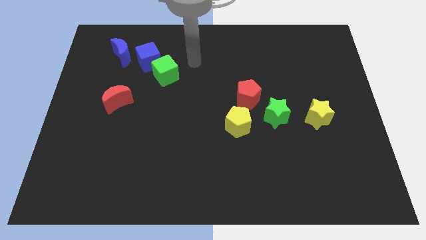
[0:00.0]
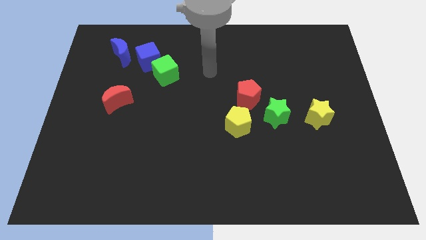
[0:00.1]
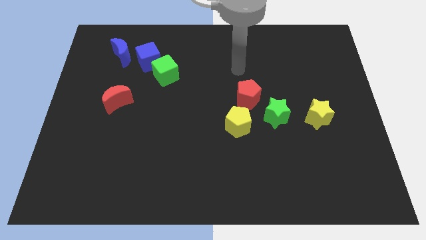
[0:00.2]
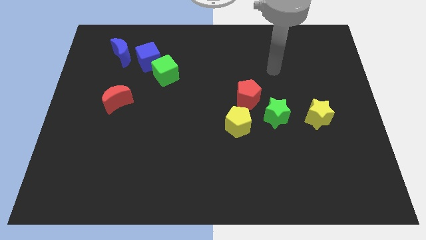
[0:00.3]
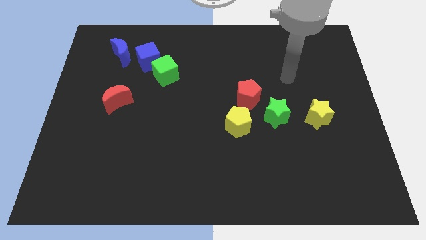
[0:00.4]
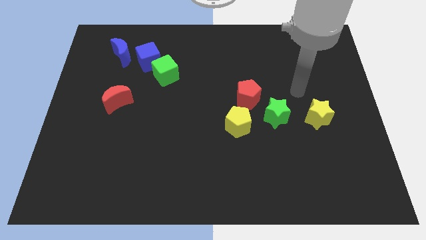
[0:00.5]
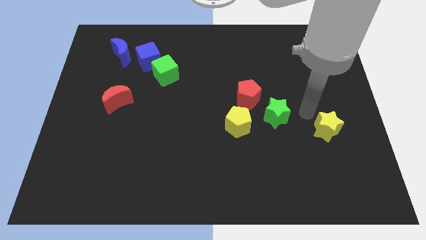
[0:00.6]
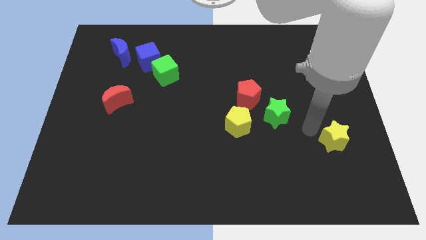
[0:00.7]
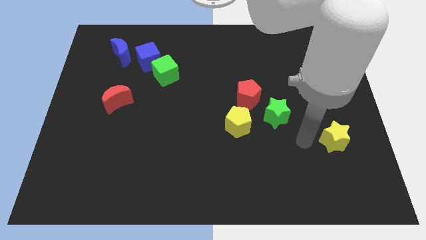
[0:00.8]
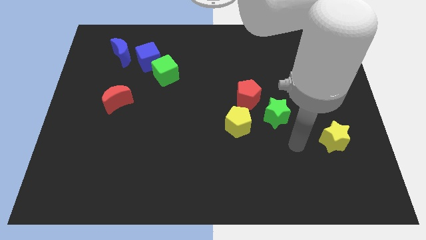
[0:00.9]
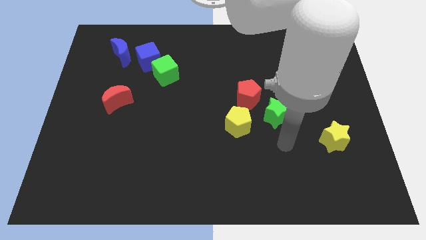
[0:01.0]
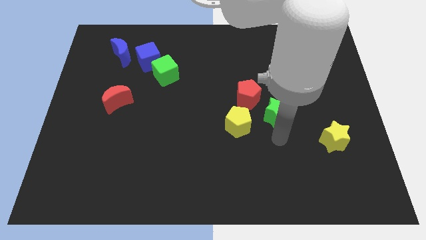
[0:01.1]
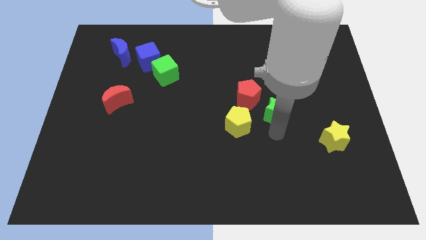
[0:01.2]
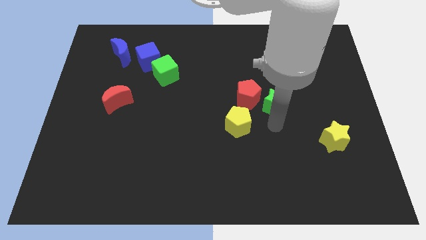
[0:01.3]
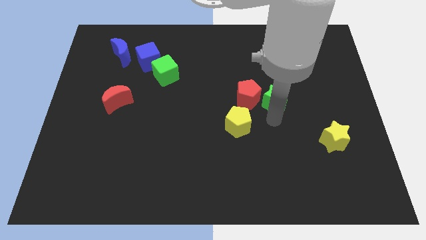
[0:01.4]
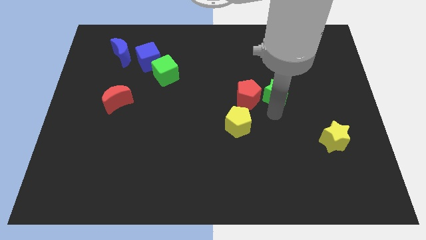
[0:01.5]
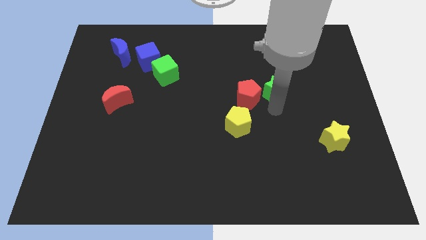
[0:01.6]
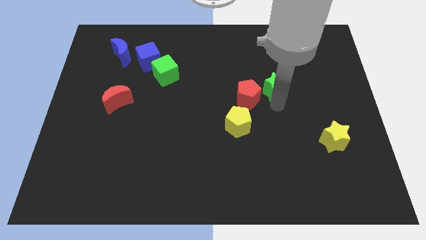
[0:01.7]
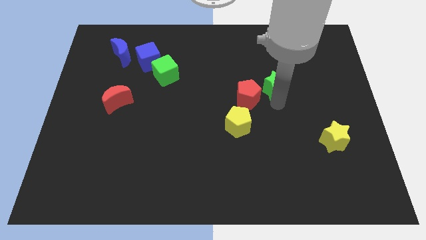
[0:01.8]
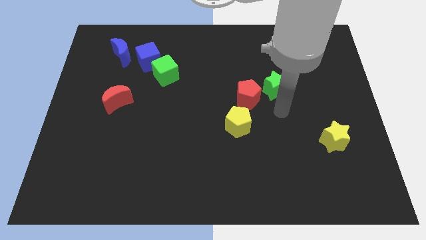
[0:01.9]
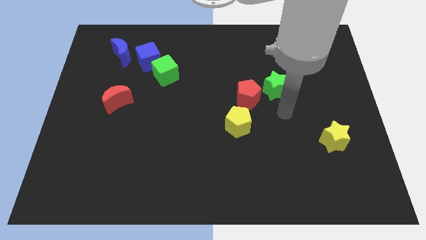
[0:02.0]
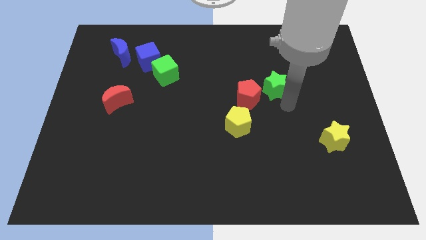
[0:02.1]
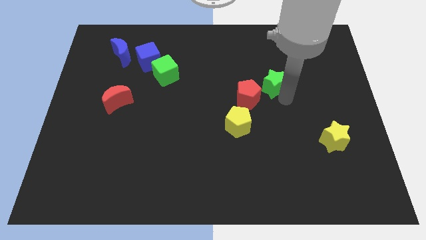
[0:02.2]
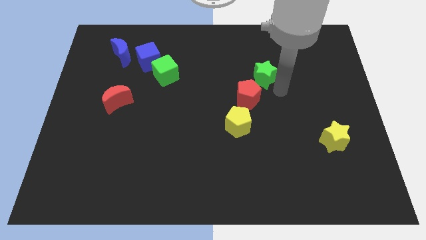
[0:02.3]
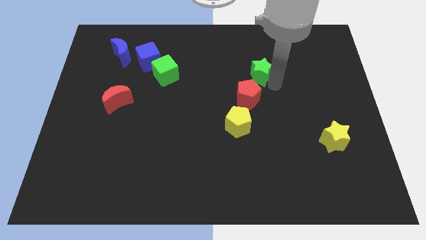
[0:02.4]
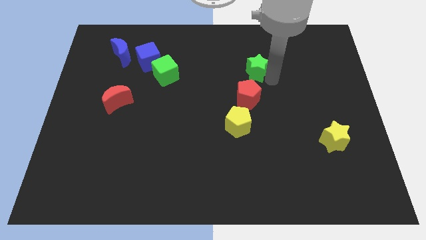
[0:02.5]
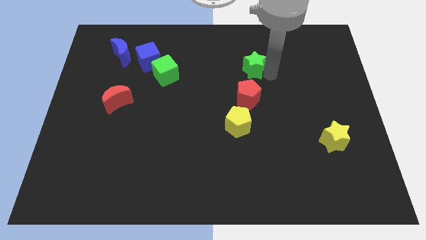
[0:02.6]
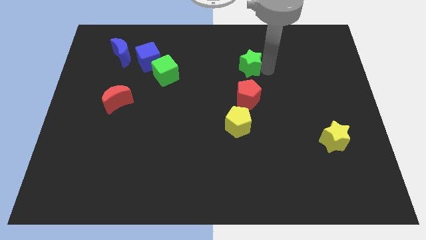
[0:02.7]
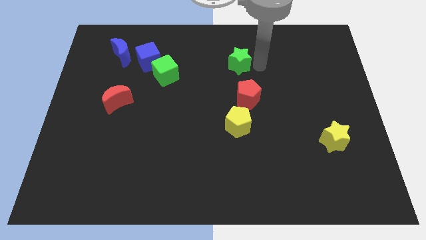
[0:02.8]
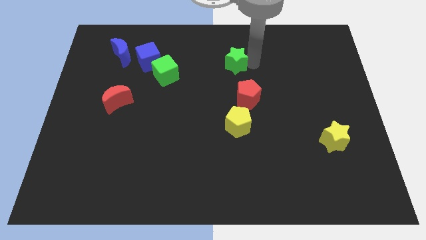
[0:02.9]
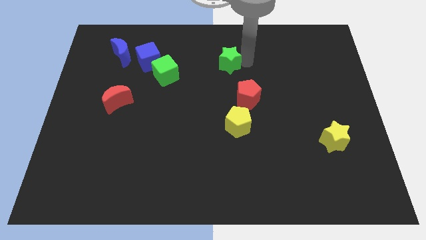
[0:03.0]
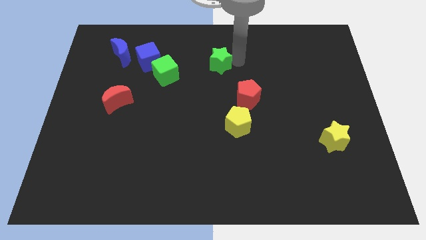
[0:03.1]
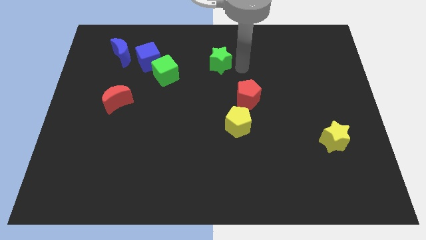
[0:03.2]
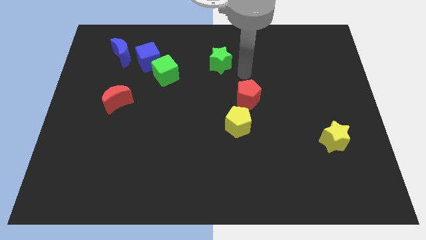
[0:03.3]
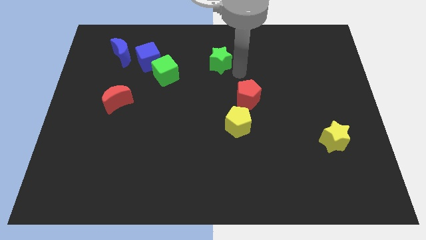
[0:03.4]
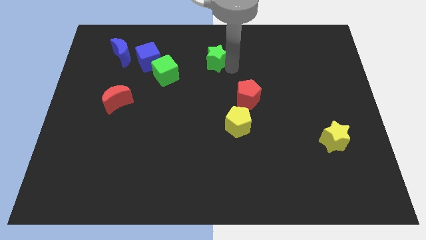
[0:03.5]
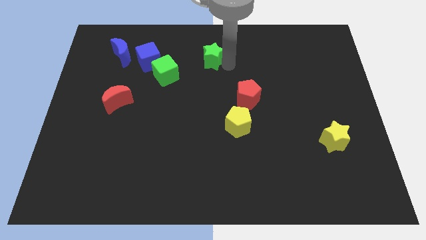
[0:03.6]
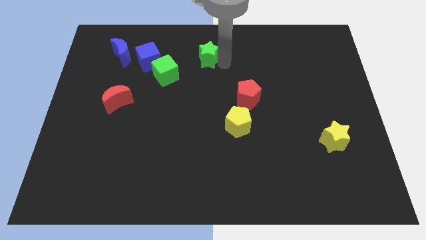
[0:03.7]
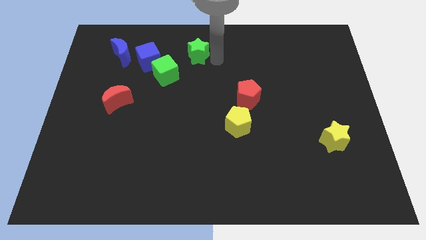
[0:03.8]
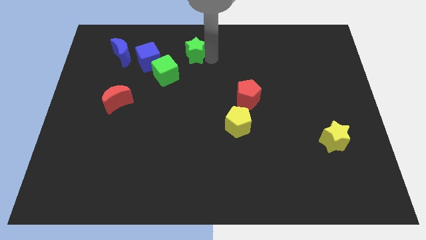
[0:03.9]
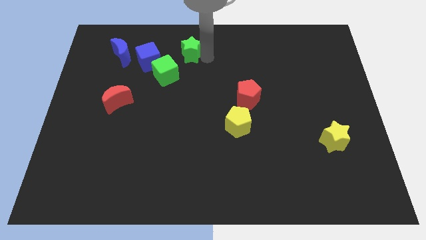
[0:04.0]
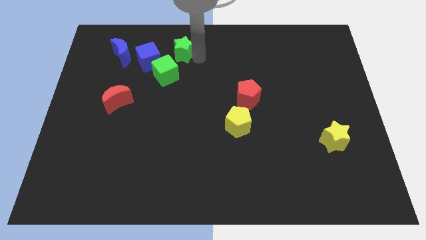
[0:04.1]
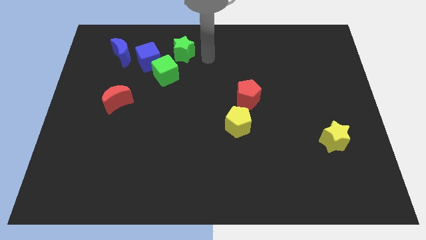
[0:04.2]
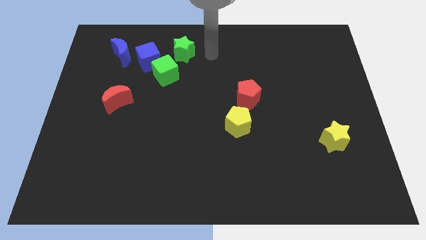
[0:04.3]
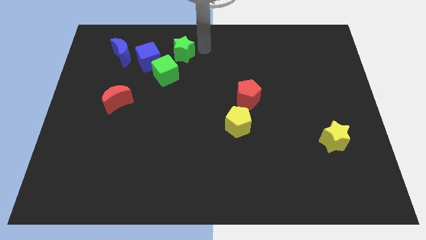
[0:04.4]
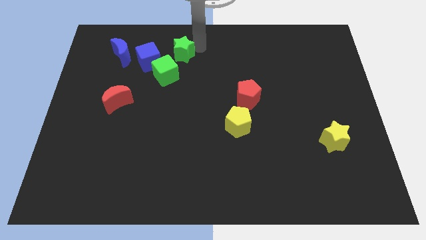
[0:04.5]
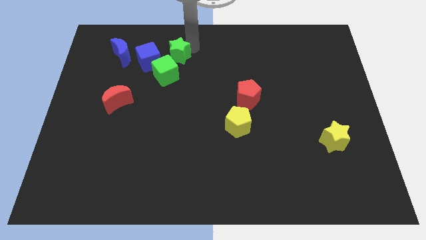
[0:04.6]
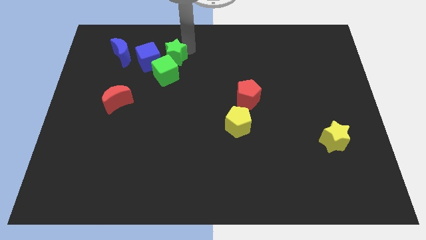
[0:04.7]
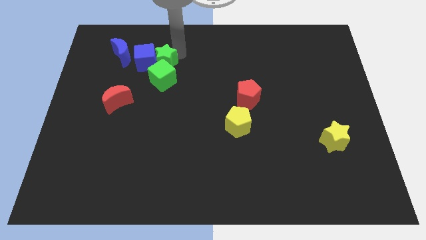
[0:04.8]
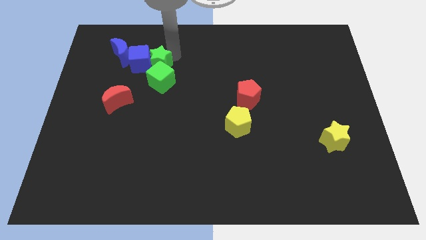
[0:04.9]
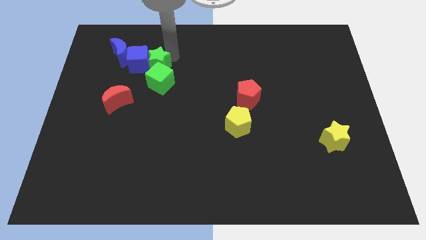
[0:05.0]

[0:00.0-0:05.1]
slide the green star towards the blue cube

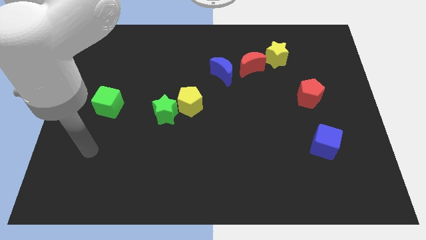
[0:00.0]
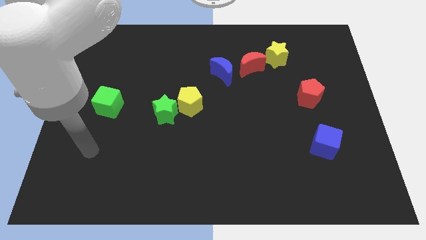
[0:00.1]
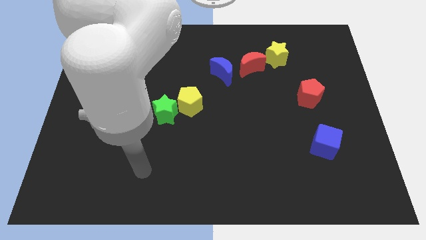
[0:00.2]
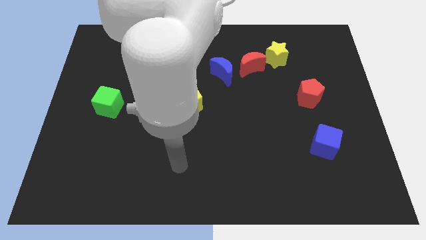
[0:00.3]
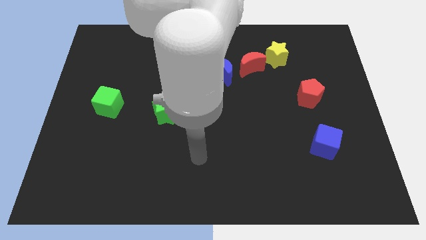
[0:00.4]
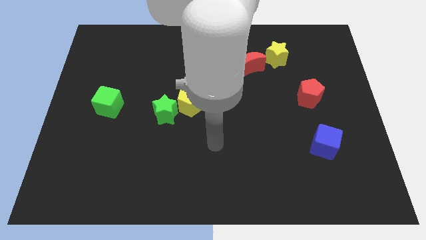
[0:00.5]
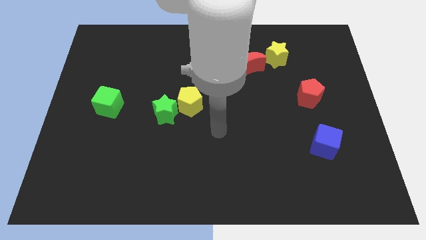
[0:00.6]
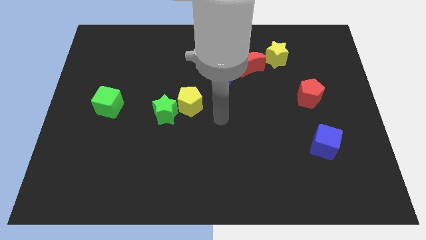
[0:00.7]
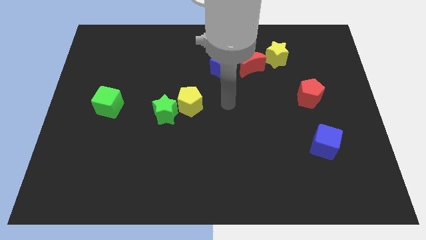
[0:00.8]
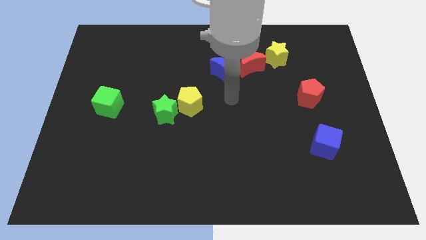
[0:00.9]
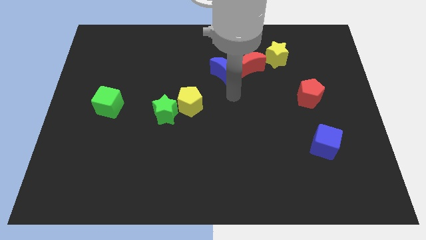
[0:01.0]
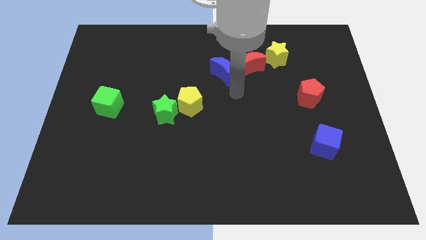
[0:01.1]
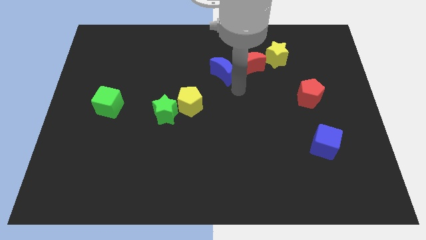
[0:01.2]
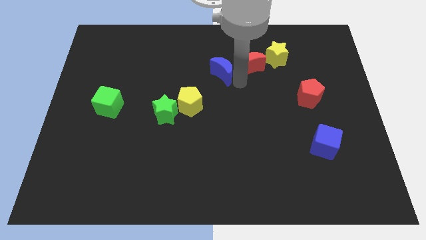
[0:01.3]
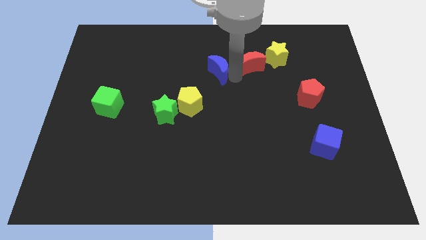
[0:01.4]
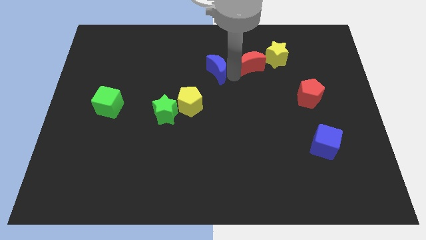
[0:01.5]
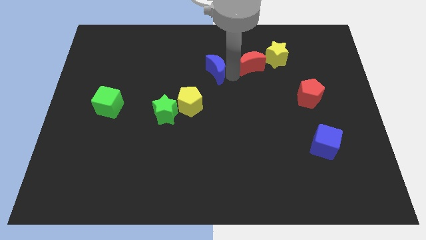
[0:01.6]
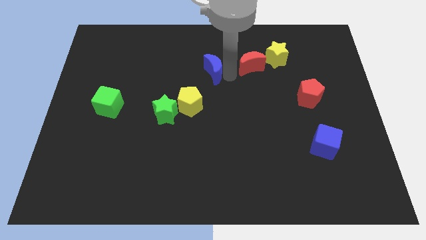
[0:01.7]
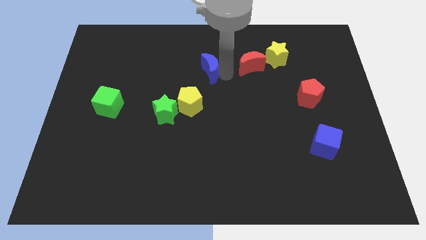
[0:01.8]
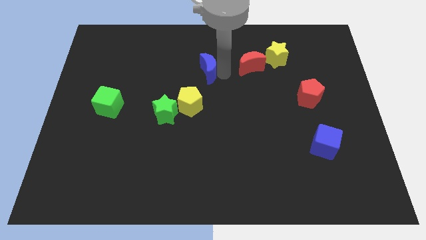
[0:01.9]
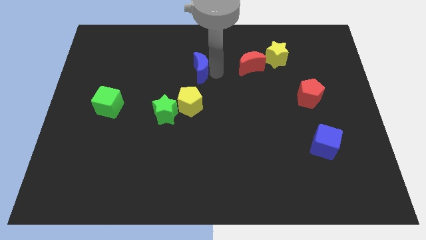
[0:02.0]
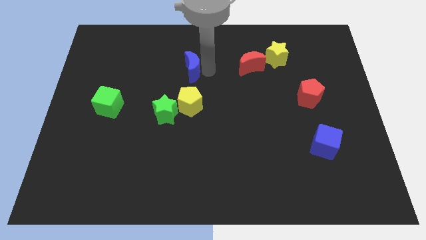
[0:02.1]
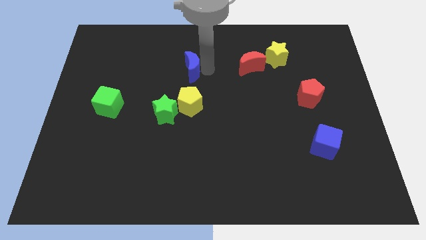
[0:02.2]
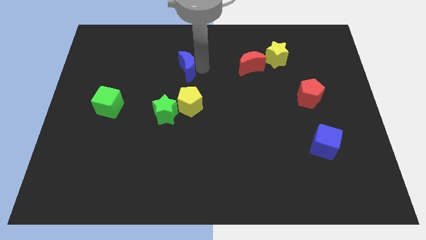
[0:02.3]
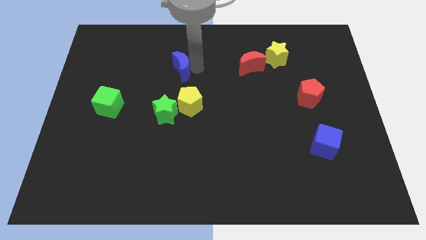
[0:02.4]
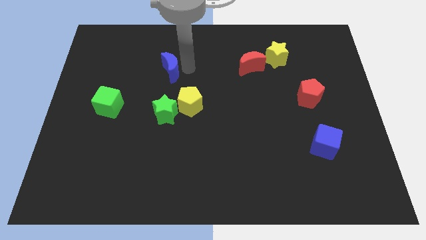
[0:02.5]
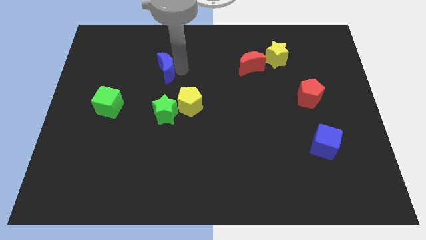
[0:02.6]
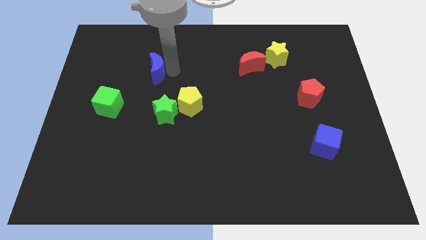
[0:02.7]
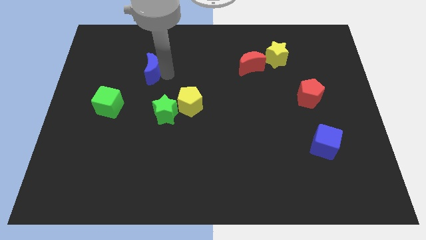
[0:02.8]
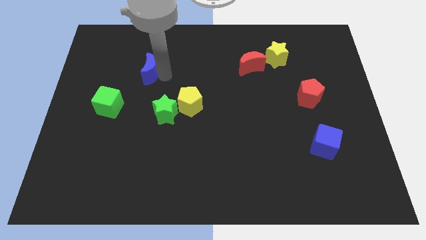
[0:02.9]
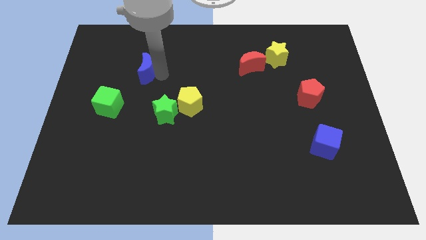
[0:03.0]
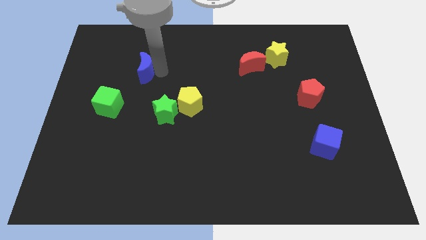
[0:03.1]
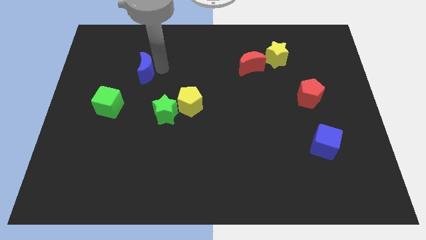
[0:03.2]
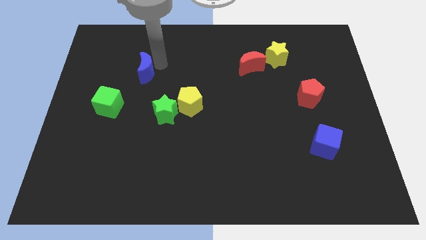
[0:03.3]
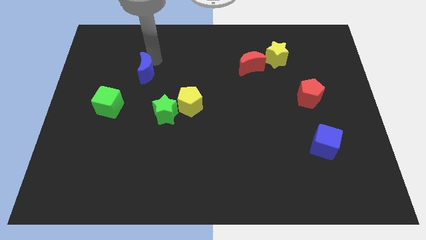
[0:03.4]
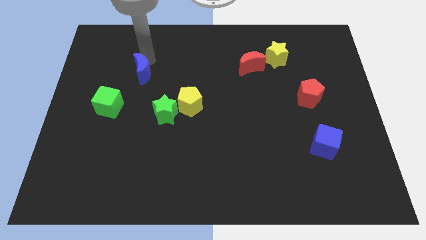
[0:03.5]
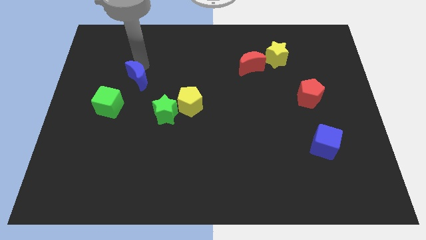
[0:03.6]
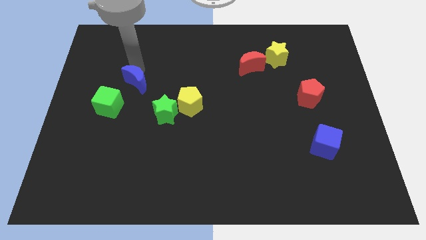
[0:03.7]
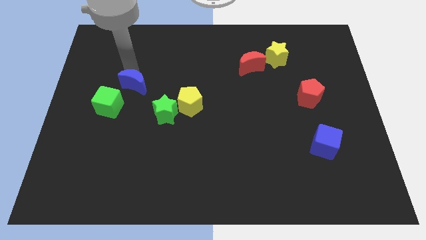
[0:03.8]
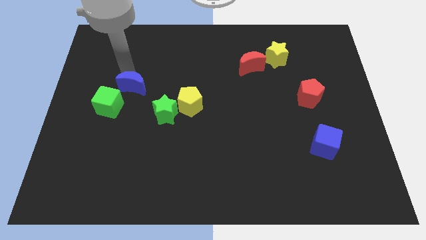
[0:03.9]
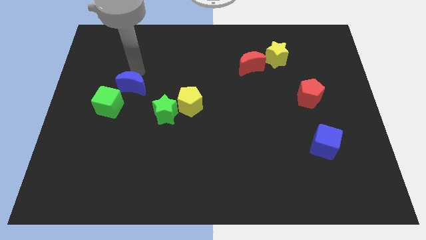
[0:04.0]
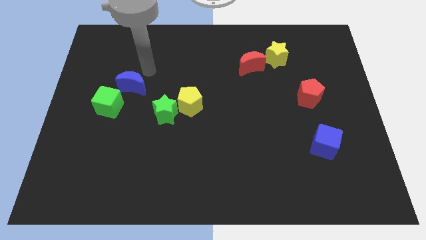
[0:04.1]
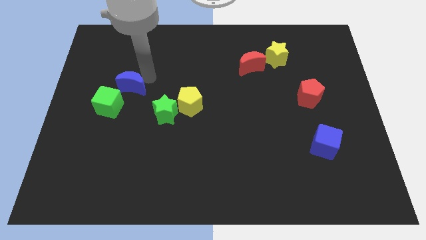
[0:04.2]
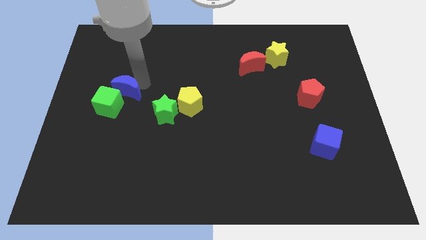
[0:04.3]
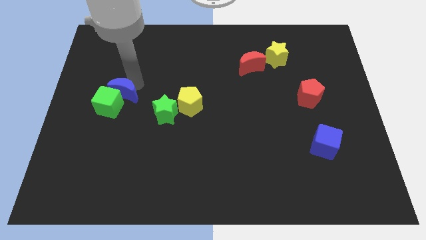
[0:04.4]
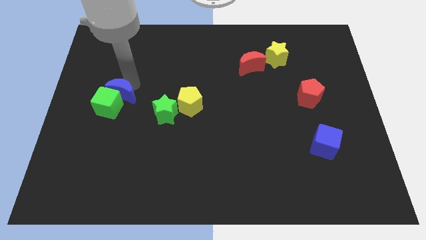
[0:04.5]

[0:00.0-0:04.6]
put the blue moon next to the green cube
